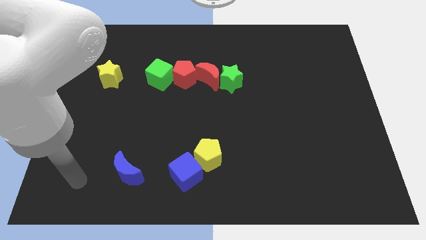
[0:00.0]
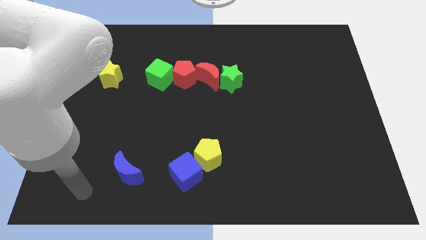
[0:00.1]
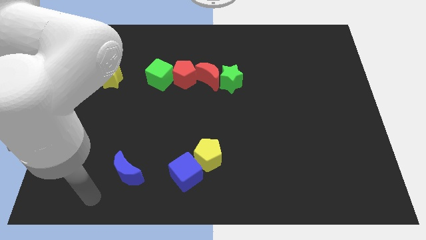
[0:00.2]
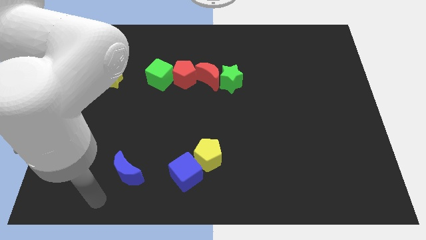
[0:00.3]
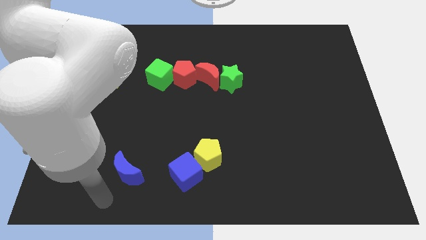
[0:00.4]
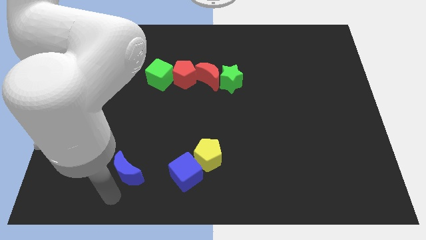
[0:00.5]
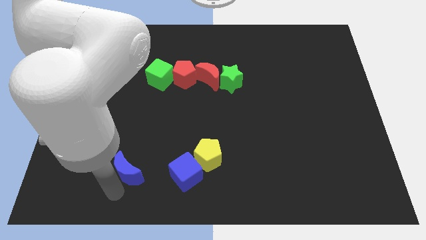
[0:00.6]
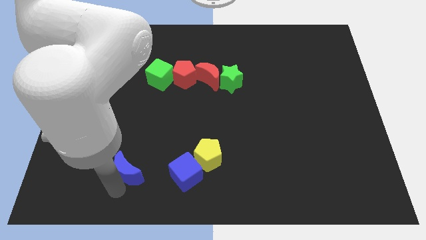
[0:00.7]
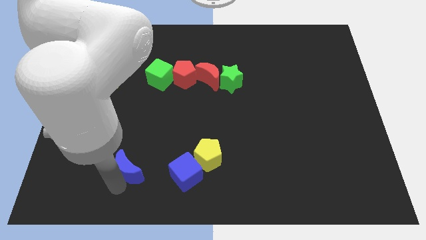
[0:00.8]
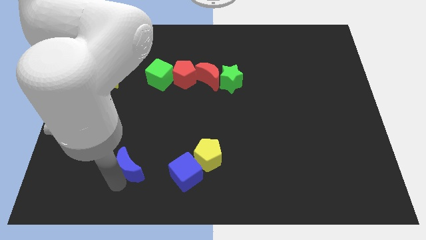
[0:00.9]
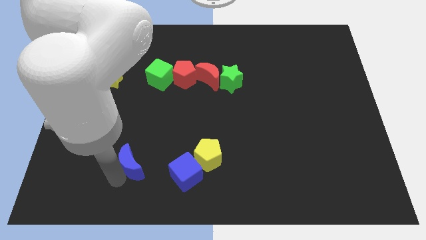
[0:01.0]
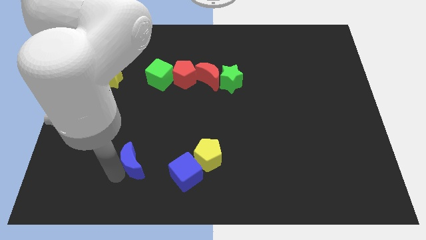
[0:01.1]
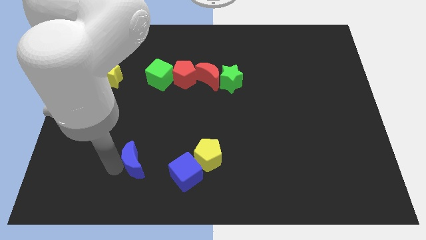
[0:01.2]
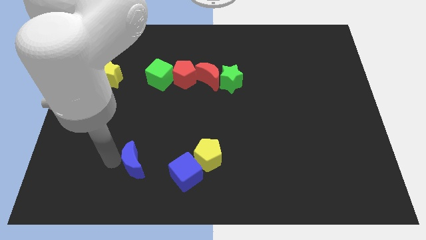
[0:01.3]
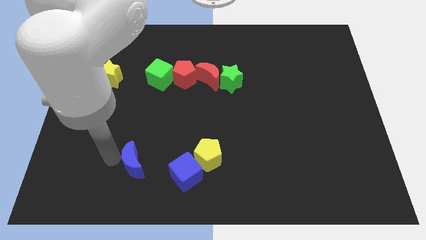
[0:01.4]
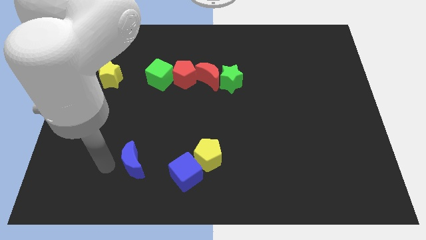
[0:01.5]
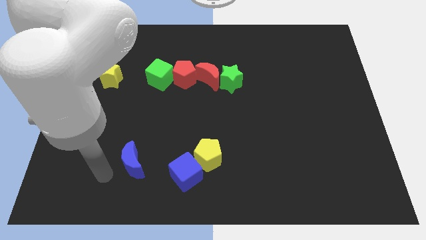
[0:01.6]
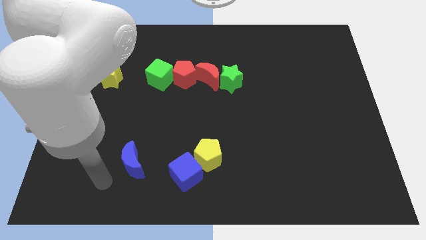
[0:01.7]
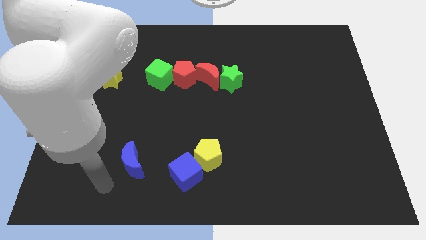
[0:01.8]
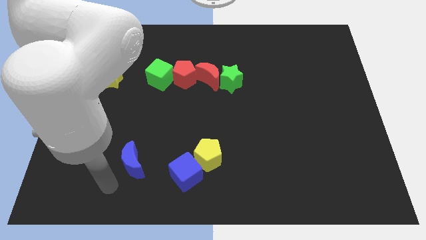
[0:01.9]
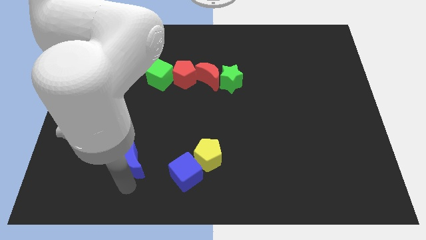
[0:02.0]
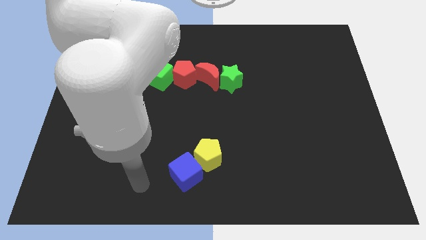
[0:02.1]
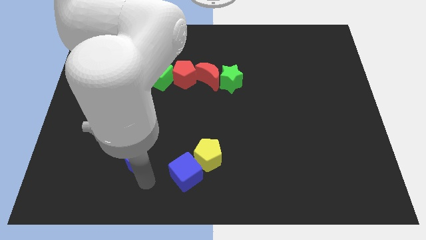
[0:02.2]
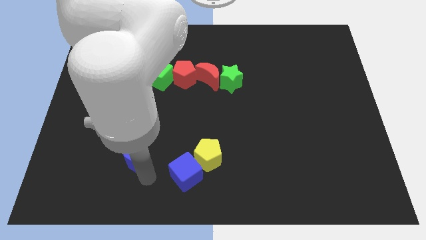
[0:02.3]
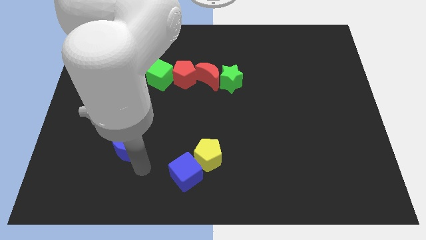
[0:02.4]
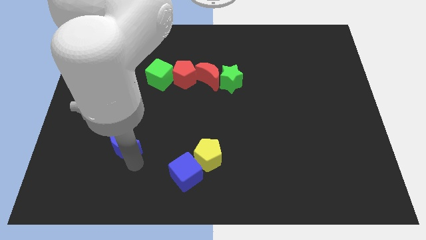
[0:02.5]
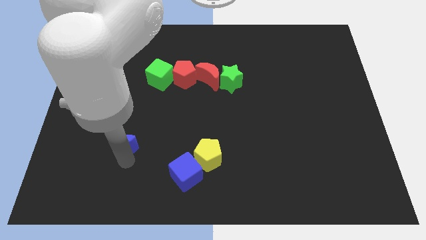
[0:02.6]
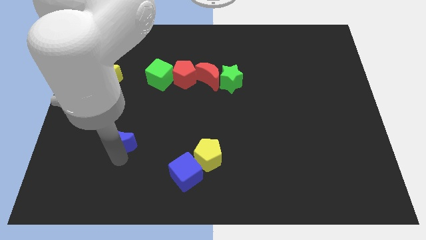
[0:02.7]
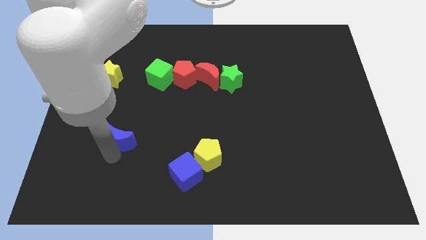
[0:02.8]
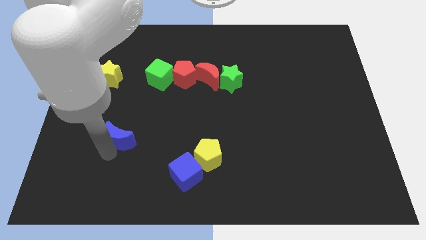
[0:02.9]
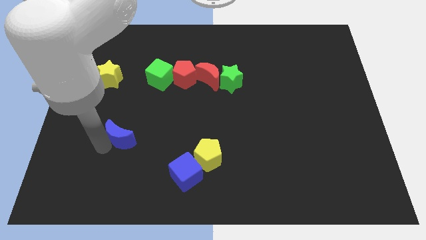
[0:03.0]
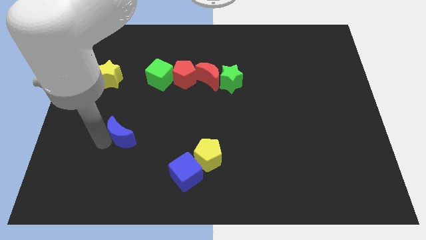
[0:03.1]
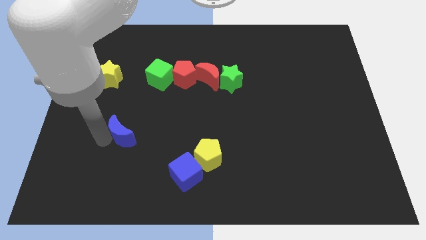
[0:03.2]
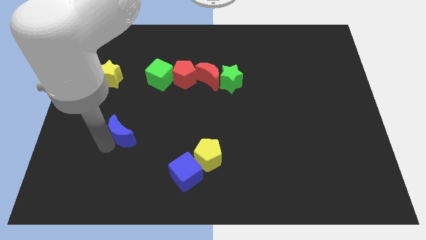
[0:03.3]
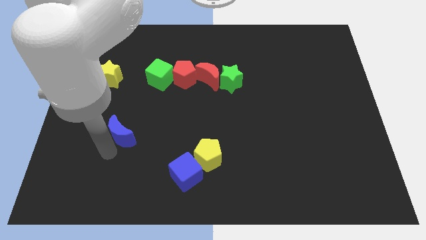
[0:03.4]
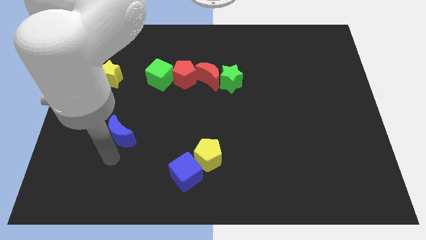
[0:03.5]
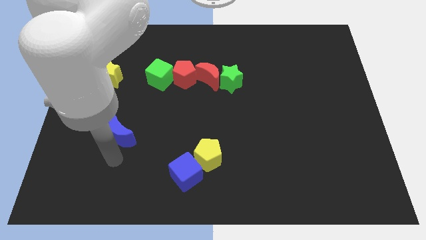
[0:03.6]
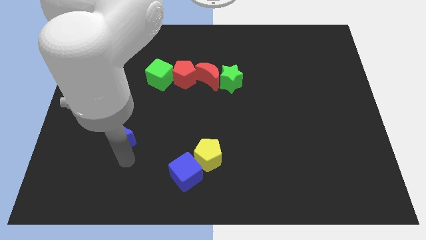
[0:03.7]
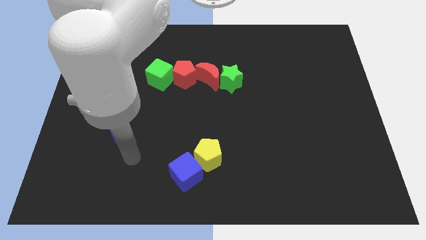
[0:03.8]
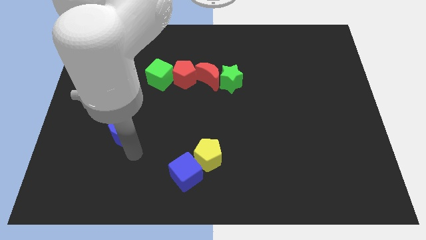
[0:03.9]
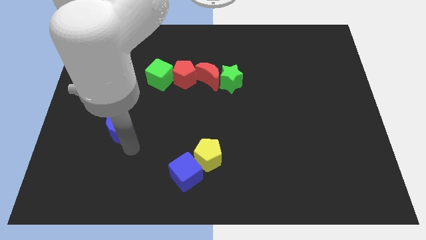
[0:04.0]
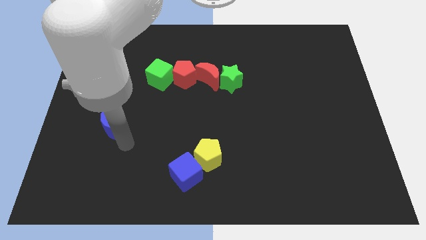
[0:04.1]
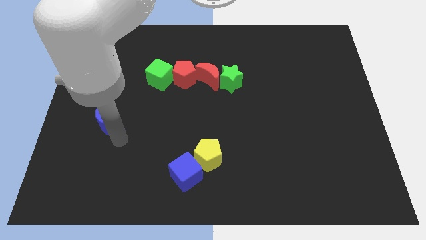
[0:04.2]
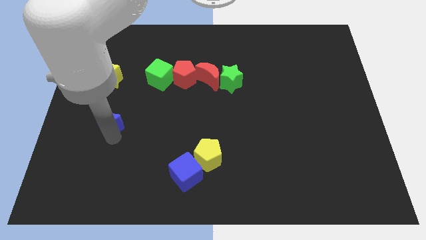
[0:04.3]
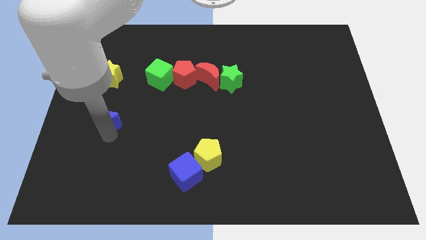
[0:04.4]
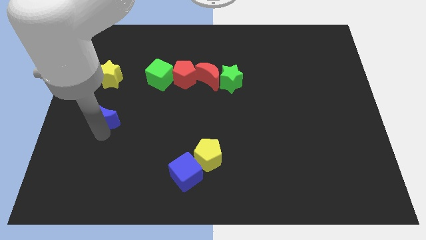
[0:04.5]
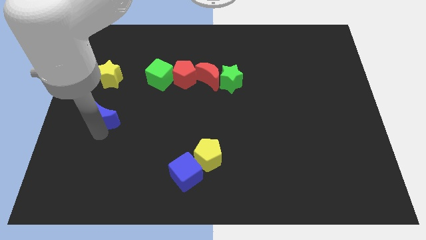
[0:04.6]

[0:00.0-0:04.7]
move the blue moon below the yellow star

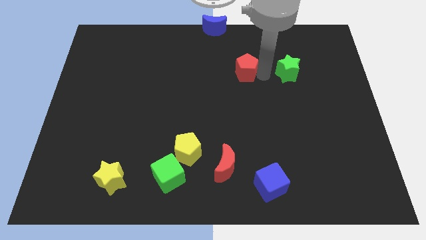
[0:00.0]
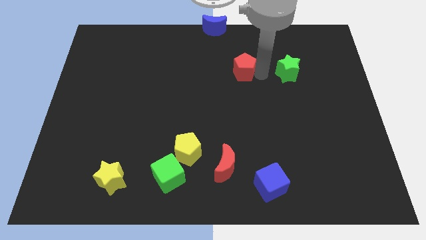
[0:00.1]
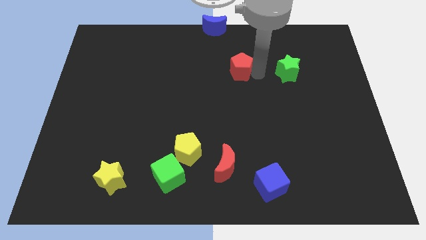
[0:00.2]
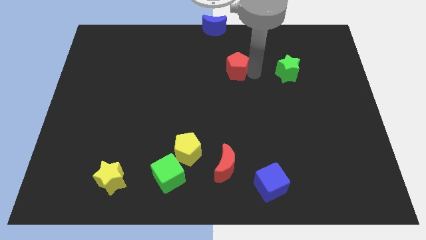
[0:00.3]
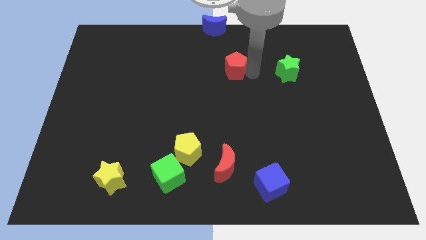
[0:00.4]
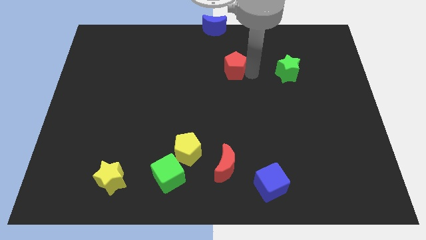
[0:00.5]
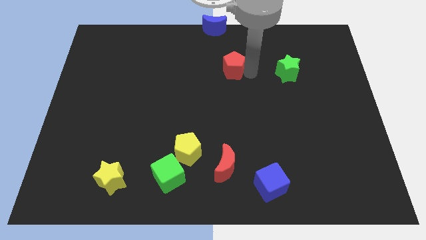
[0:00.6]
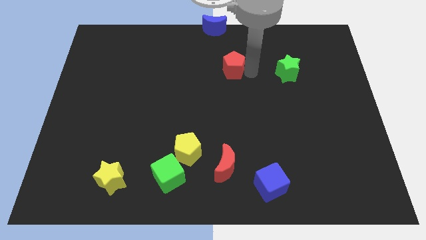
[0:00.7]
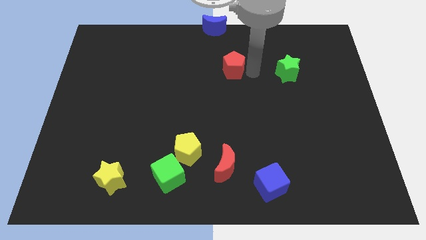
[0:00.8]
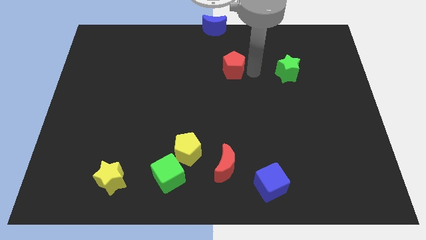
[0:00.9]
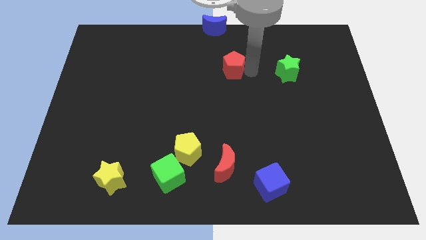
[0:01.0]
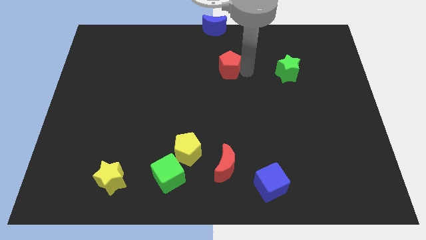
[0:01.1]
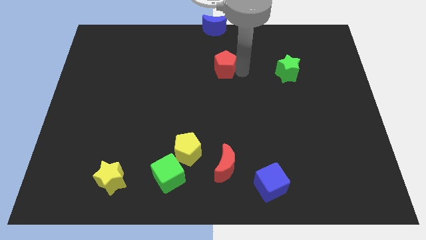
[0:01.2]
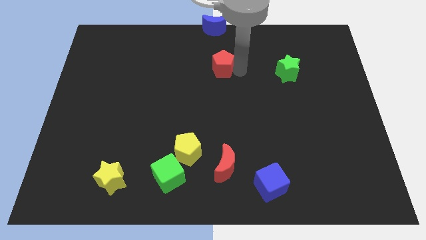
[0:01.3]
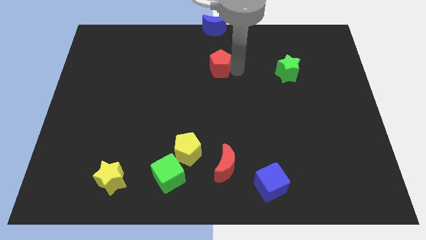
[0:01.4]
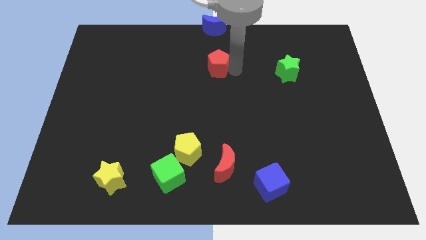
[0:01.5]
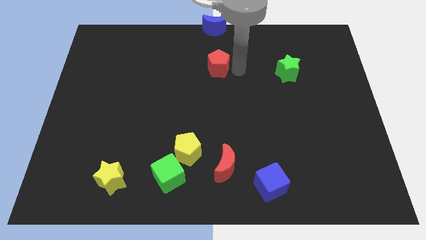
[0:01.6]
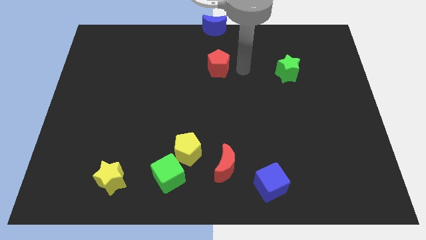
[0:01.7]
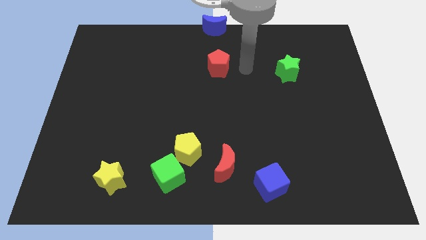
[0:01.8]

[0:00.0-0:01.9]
move the red pentagon below the blue moon

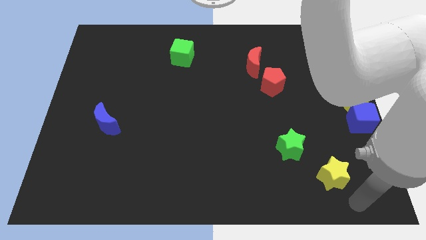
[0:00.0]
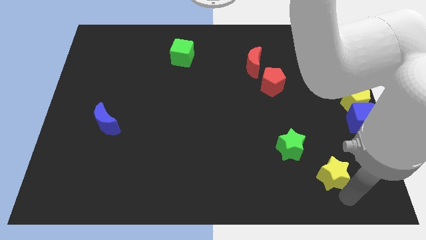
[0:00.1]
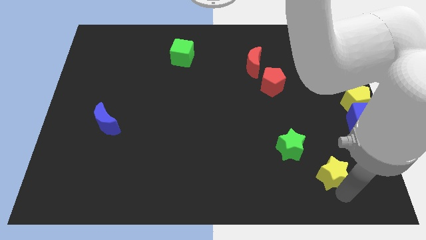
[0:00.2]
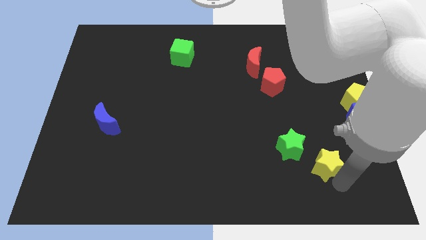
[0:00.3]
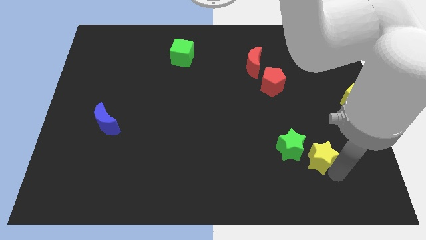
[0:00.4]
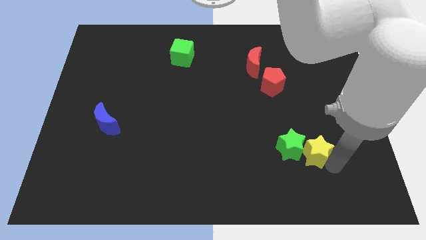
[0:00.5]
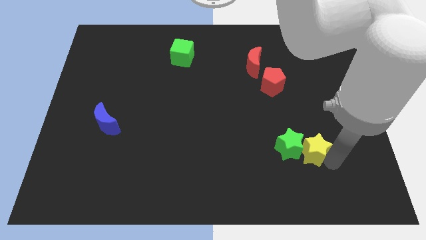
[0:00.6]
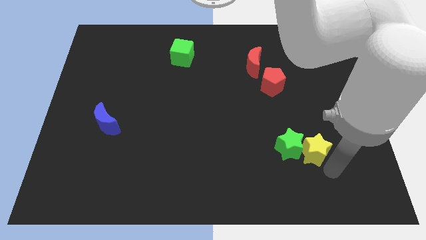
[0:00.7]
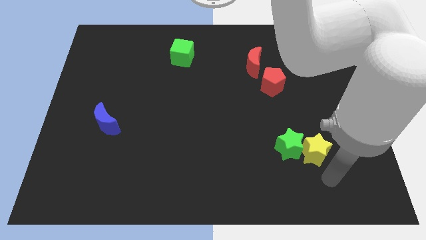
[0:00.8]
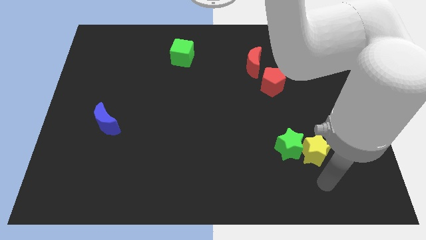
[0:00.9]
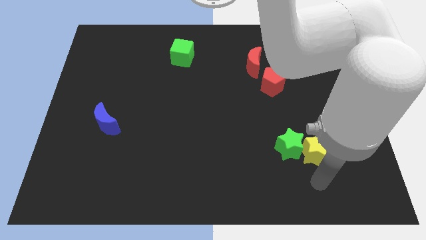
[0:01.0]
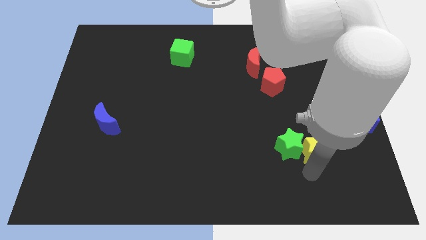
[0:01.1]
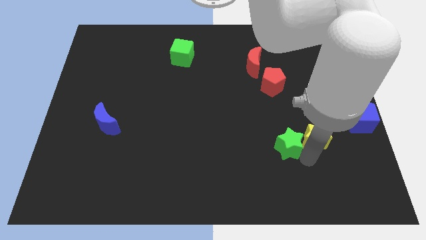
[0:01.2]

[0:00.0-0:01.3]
slide the yellow star parallel right to the green star

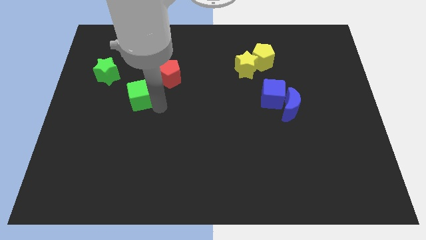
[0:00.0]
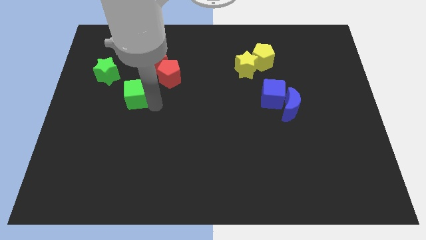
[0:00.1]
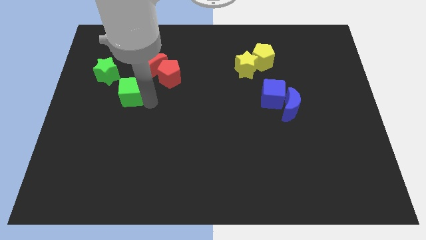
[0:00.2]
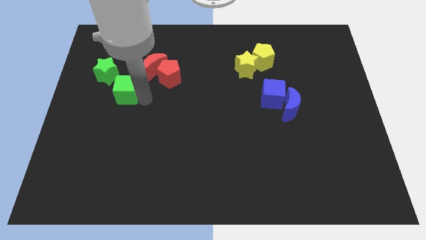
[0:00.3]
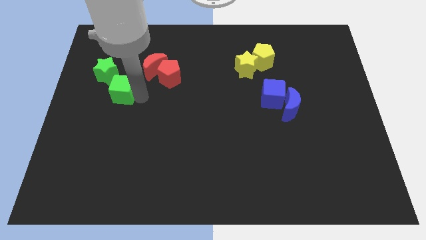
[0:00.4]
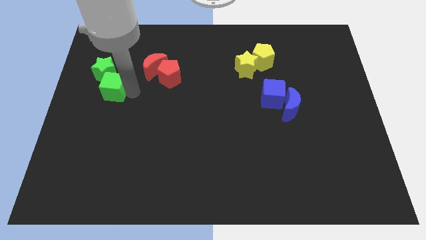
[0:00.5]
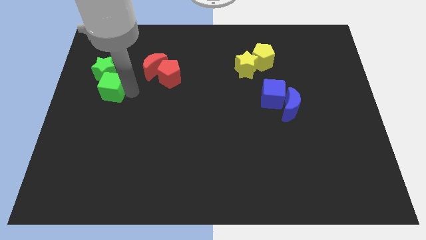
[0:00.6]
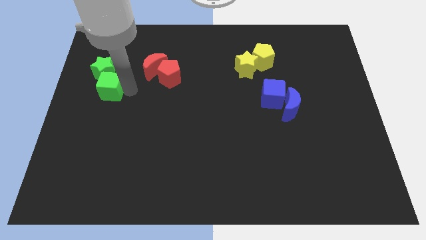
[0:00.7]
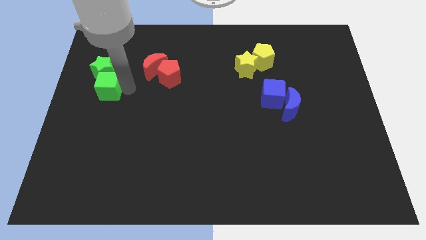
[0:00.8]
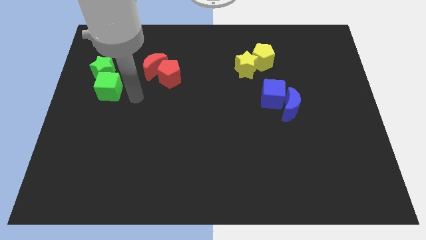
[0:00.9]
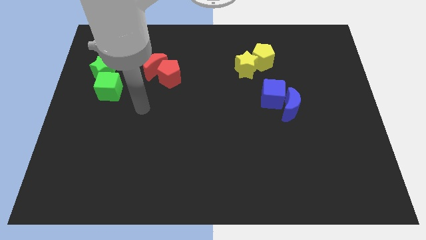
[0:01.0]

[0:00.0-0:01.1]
place the green cube under the green star
